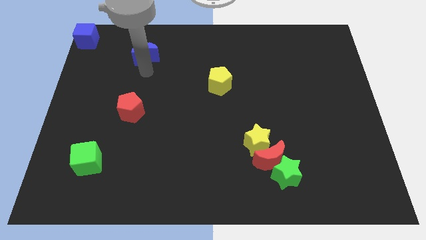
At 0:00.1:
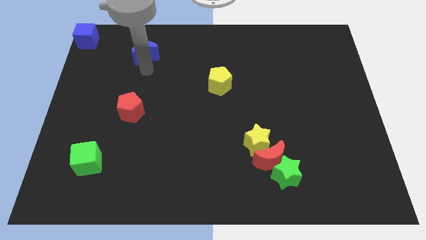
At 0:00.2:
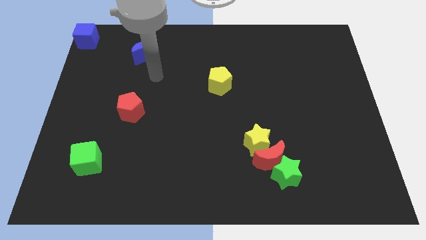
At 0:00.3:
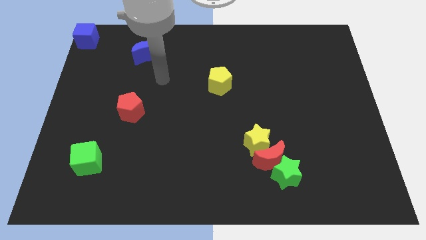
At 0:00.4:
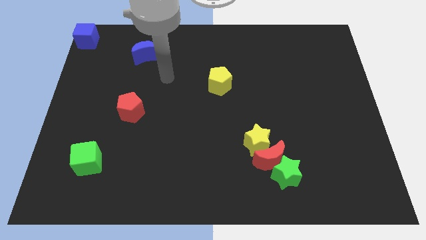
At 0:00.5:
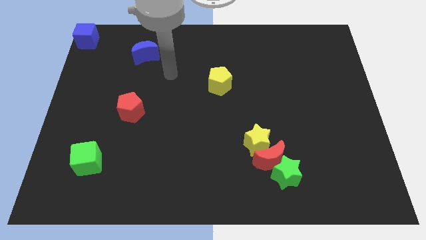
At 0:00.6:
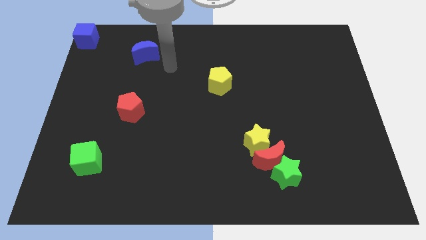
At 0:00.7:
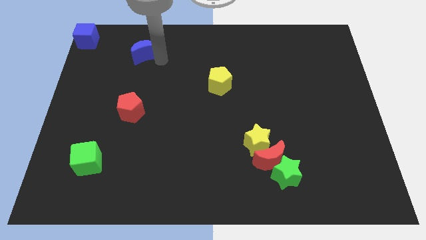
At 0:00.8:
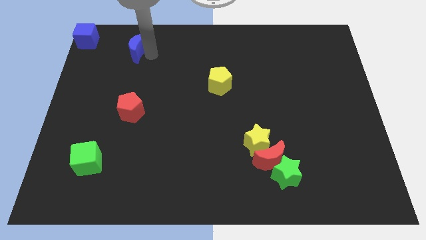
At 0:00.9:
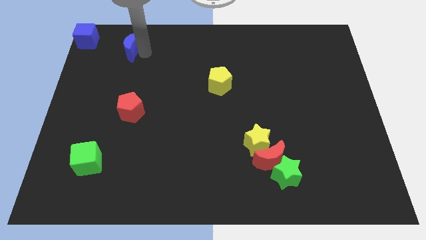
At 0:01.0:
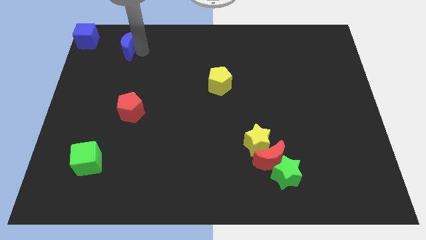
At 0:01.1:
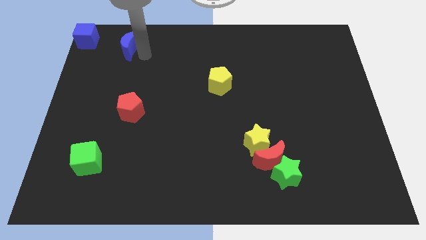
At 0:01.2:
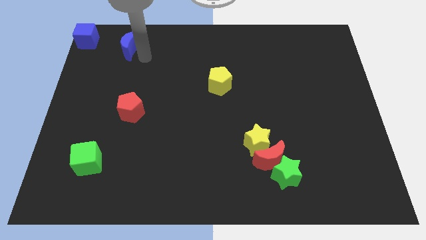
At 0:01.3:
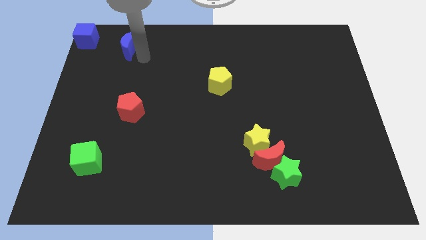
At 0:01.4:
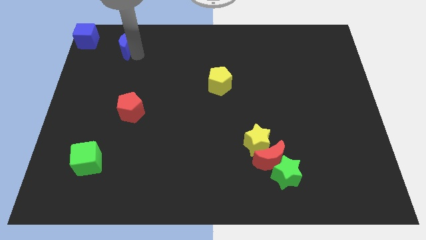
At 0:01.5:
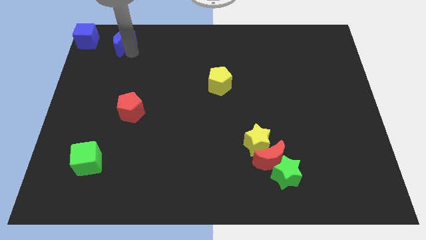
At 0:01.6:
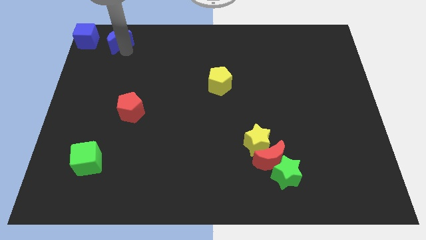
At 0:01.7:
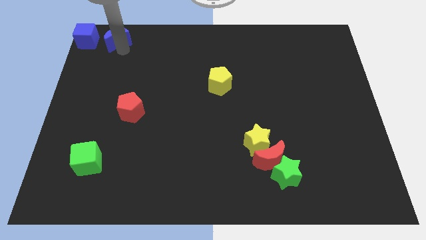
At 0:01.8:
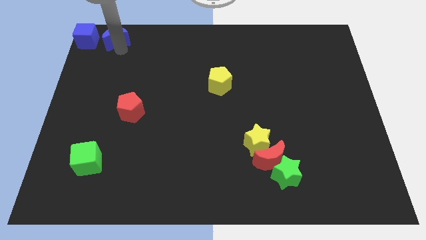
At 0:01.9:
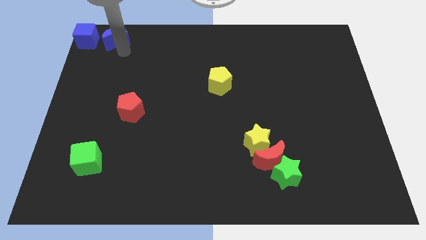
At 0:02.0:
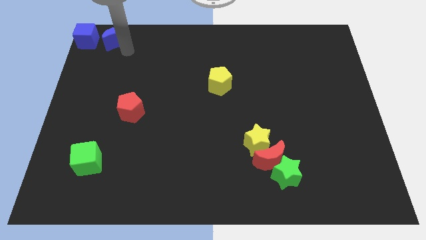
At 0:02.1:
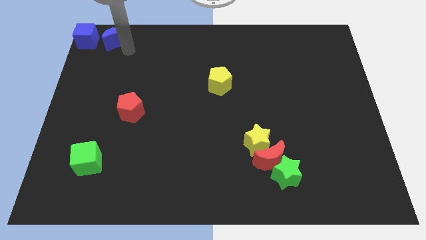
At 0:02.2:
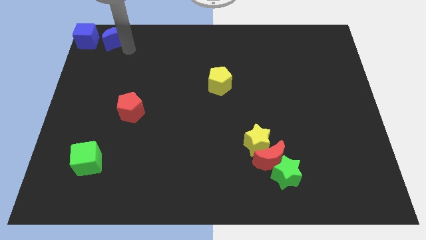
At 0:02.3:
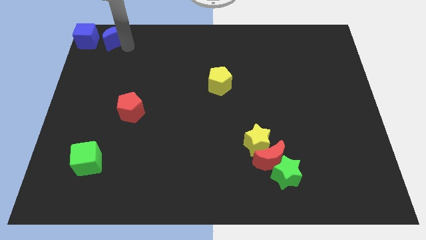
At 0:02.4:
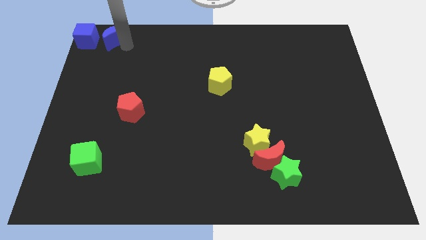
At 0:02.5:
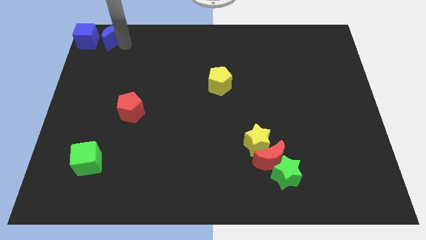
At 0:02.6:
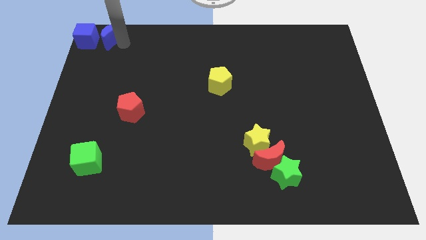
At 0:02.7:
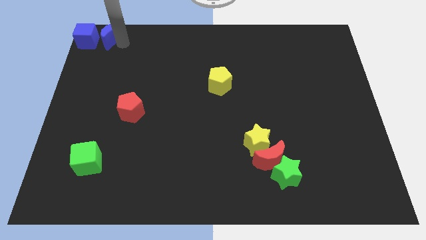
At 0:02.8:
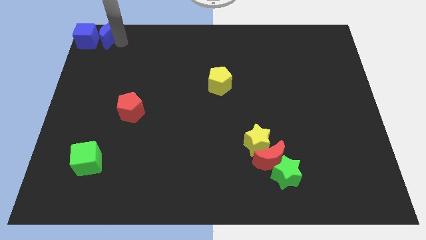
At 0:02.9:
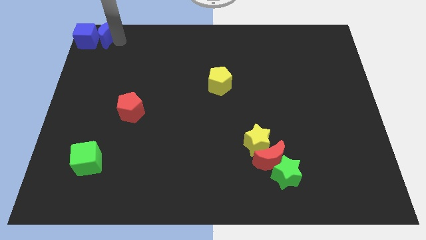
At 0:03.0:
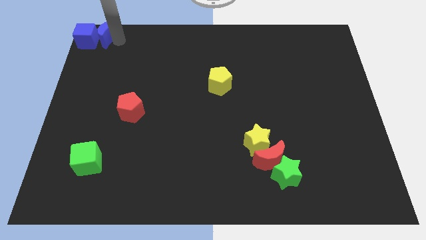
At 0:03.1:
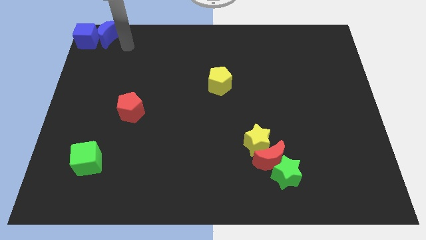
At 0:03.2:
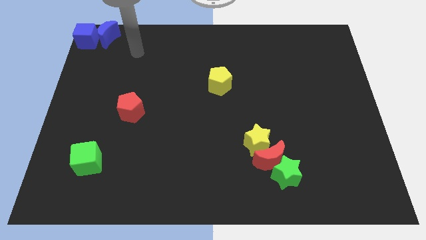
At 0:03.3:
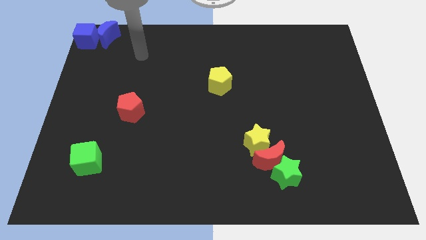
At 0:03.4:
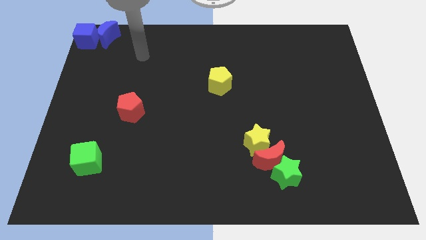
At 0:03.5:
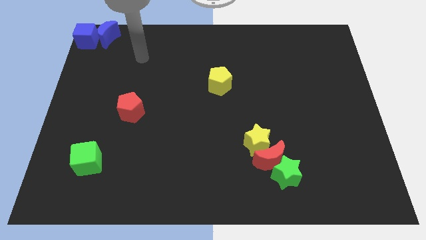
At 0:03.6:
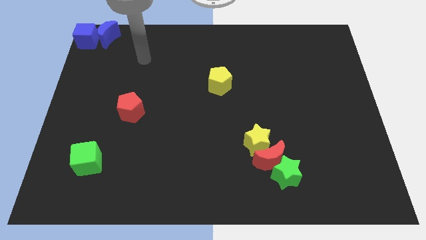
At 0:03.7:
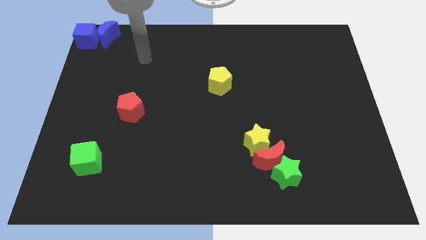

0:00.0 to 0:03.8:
move the blue moon diagonally top left to the red pentagon

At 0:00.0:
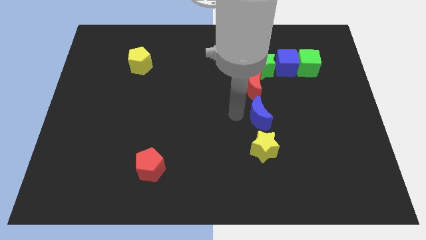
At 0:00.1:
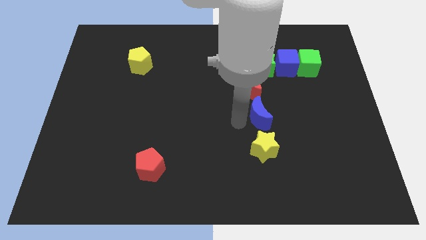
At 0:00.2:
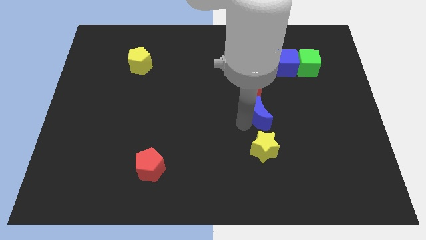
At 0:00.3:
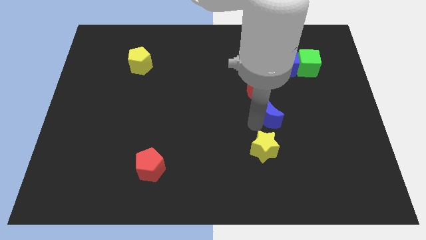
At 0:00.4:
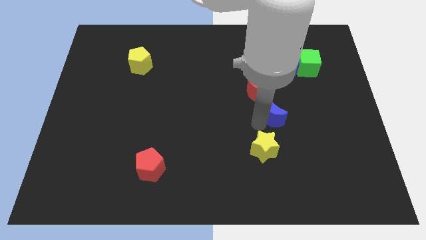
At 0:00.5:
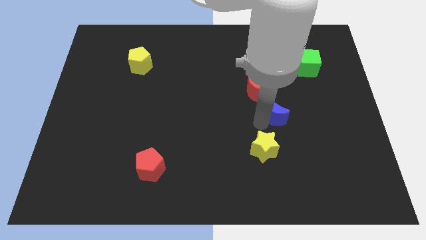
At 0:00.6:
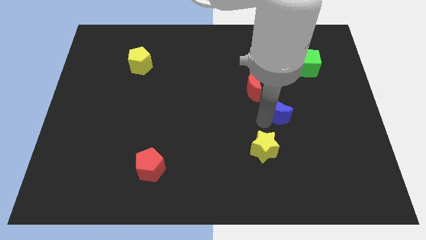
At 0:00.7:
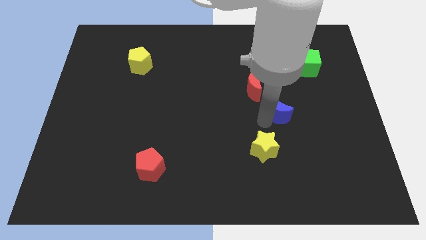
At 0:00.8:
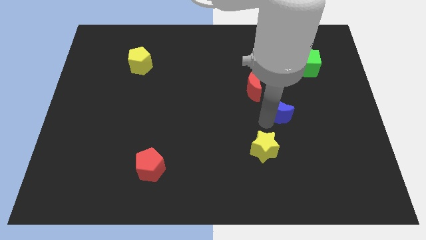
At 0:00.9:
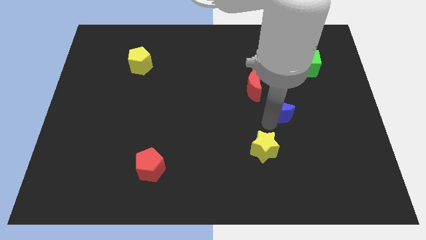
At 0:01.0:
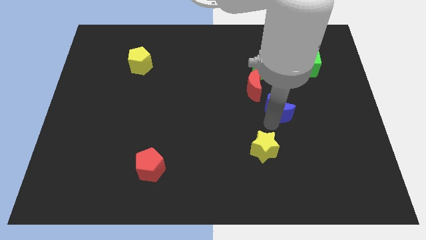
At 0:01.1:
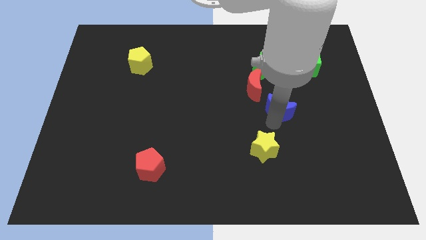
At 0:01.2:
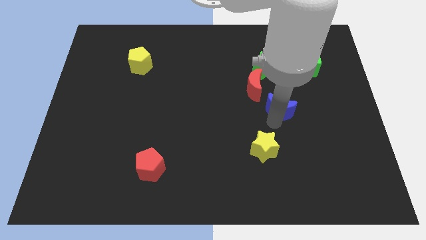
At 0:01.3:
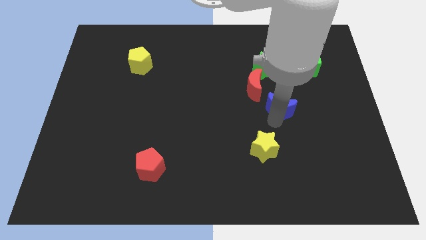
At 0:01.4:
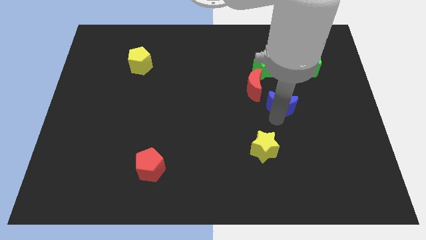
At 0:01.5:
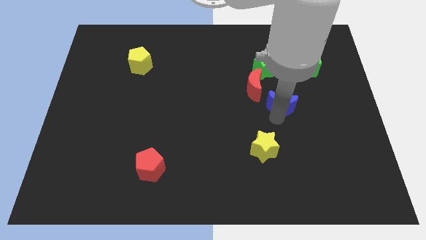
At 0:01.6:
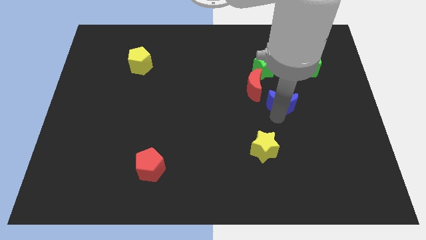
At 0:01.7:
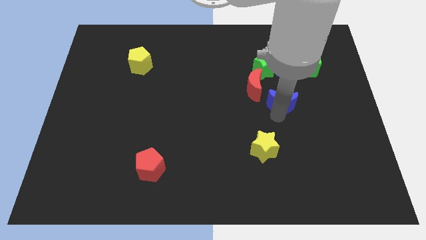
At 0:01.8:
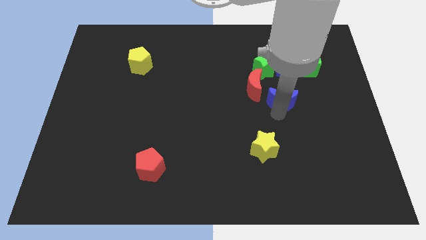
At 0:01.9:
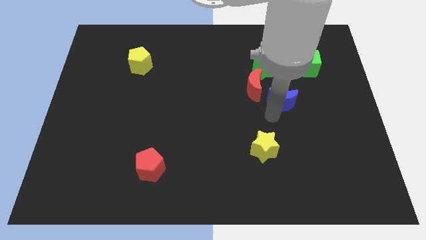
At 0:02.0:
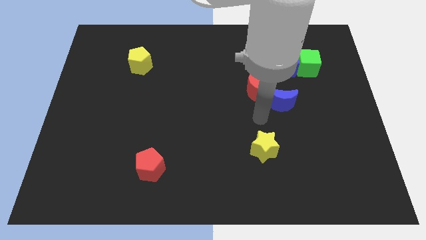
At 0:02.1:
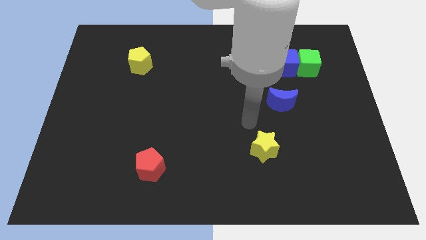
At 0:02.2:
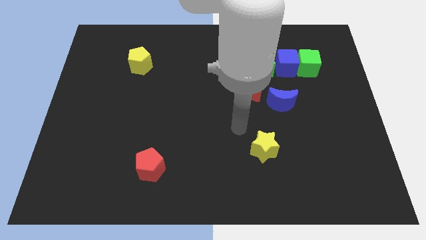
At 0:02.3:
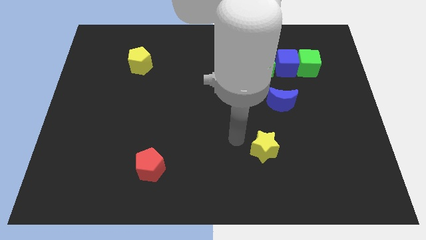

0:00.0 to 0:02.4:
move blue crescent vertically below the blue cube

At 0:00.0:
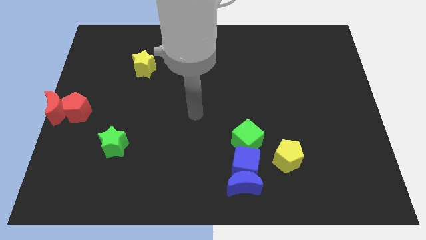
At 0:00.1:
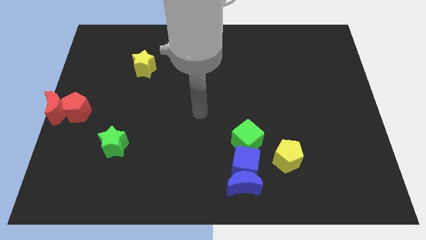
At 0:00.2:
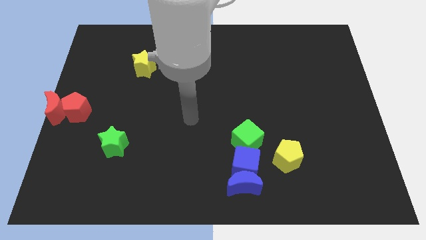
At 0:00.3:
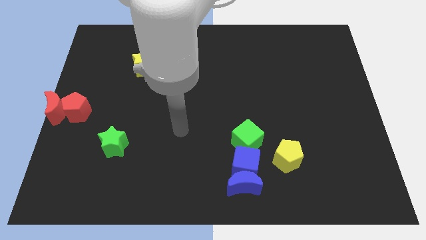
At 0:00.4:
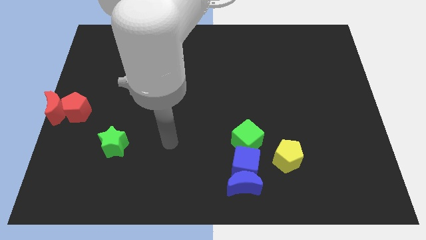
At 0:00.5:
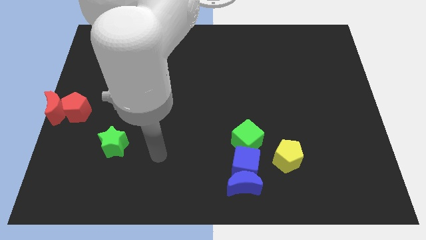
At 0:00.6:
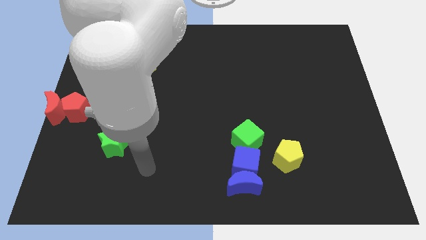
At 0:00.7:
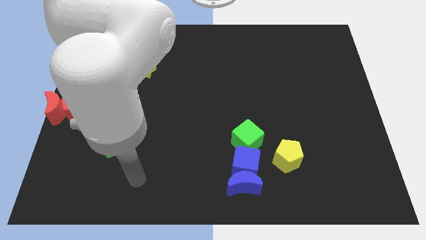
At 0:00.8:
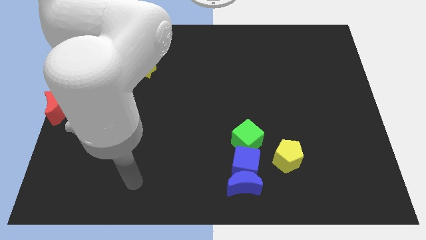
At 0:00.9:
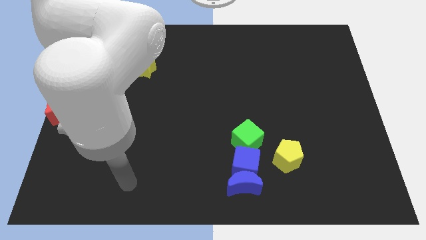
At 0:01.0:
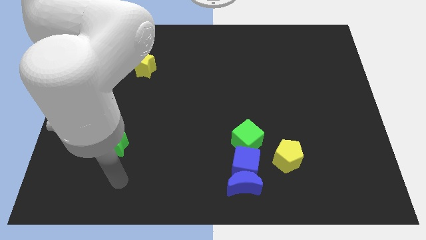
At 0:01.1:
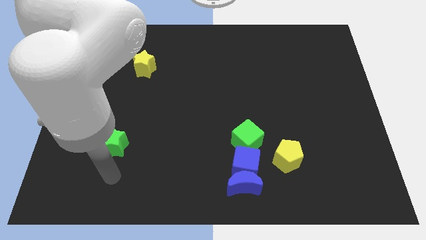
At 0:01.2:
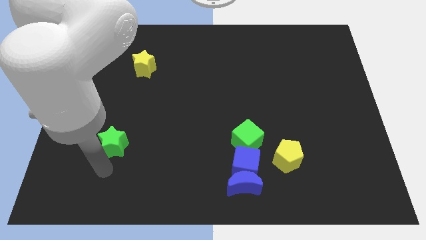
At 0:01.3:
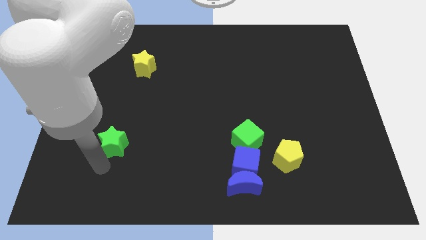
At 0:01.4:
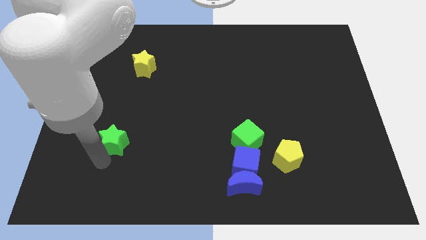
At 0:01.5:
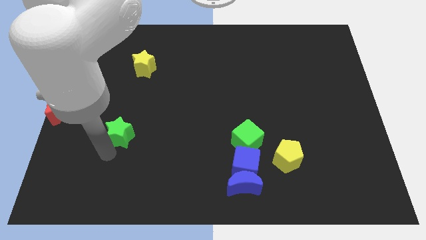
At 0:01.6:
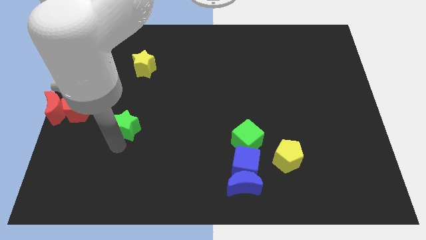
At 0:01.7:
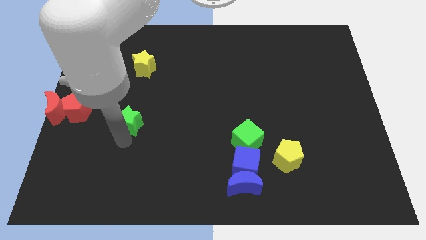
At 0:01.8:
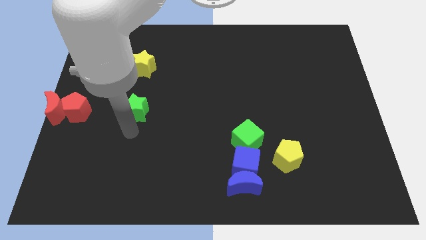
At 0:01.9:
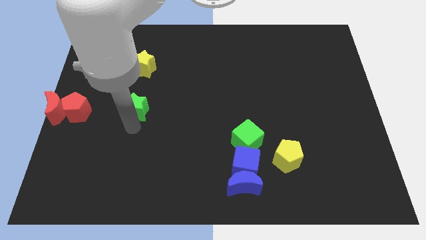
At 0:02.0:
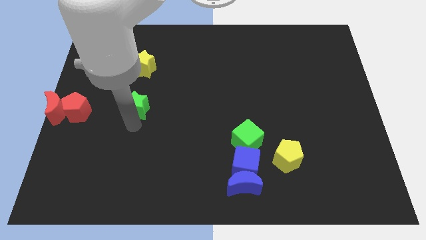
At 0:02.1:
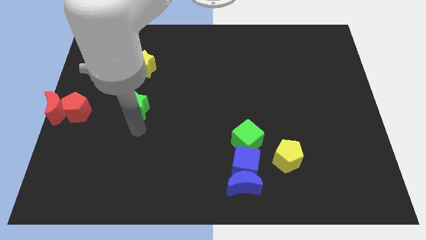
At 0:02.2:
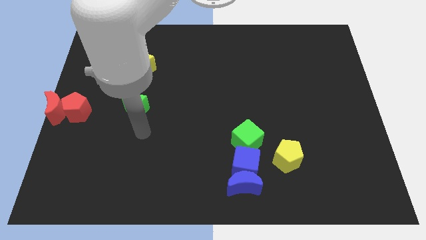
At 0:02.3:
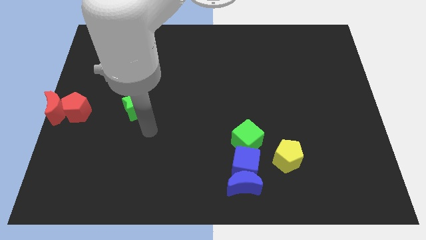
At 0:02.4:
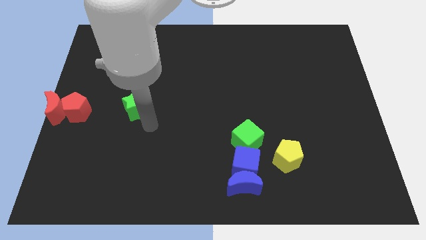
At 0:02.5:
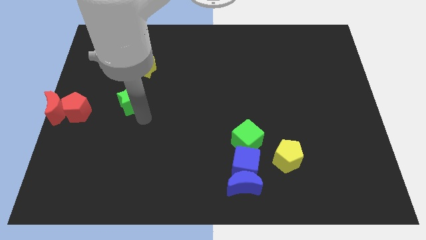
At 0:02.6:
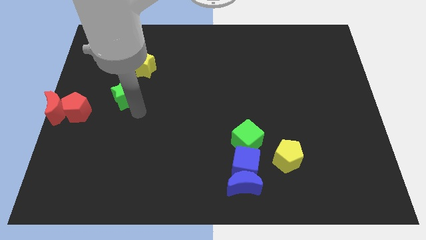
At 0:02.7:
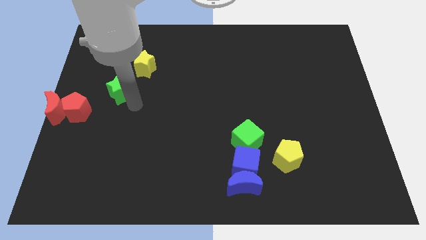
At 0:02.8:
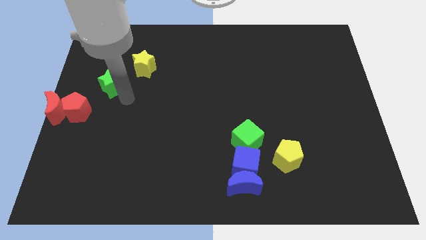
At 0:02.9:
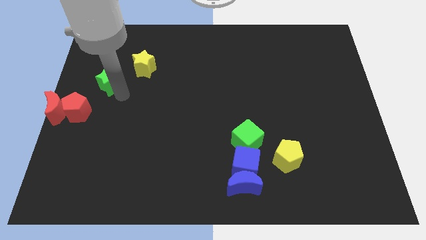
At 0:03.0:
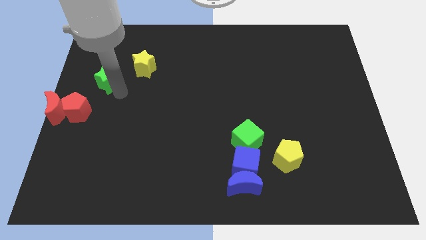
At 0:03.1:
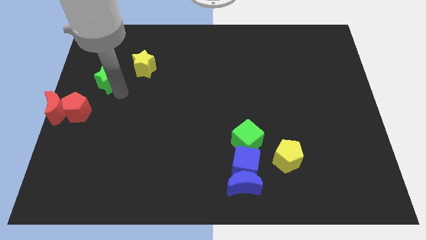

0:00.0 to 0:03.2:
push the green star to the right side of the red pentagon
